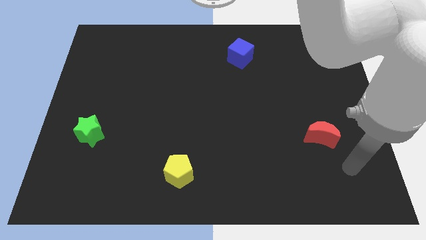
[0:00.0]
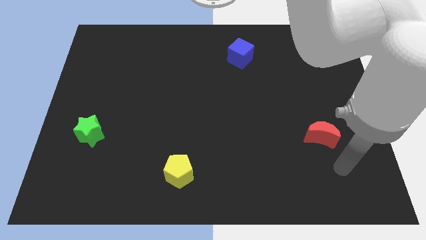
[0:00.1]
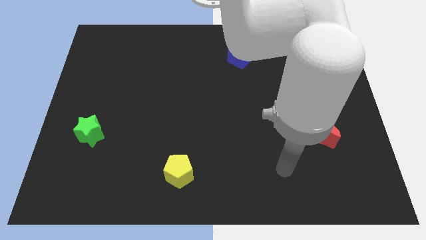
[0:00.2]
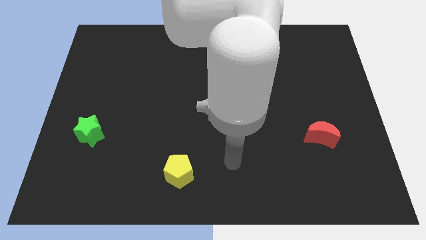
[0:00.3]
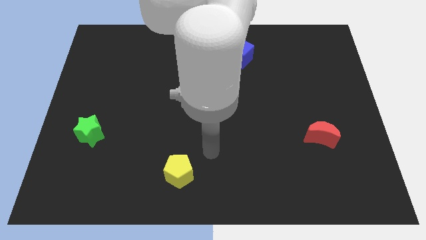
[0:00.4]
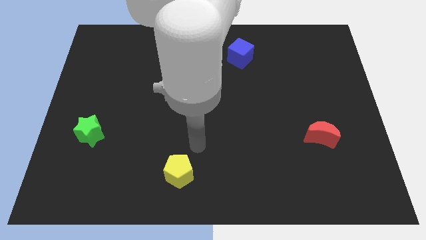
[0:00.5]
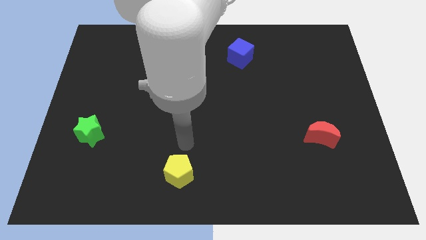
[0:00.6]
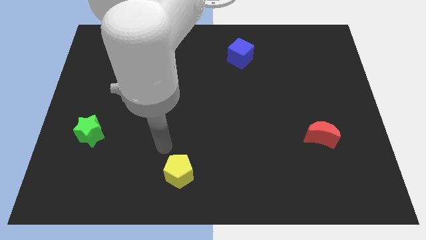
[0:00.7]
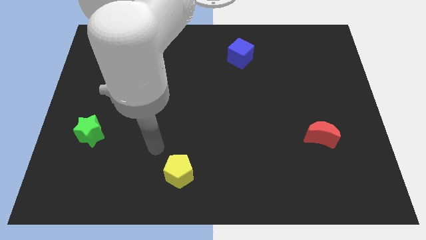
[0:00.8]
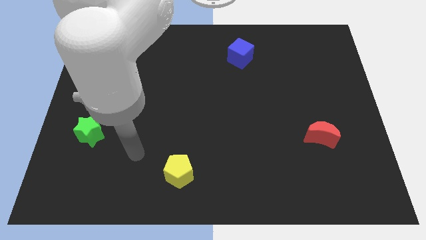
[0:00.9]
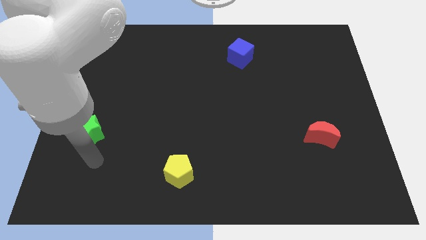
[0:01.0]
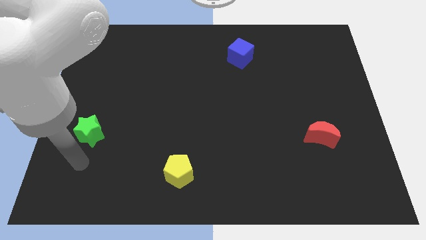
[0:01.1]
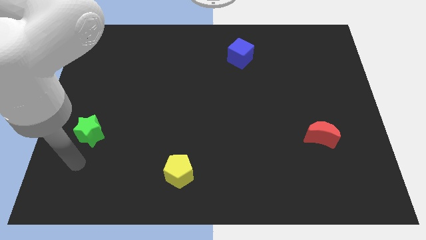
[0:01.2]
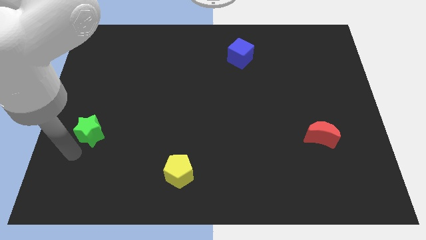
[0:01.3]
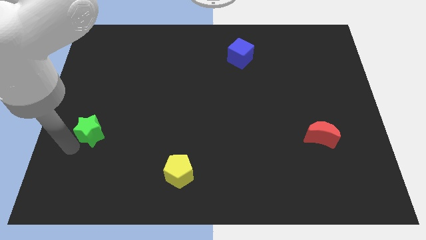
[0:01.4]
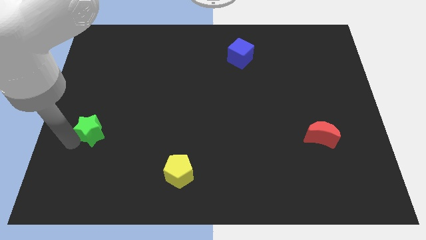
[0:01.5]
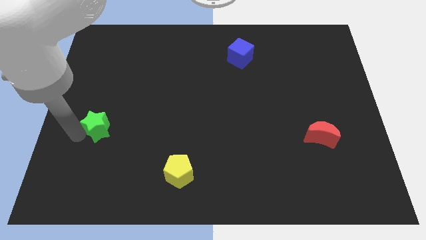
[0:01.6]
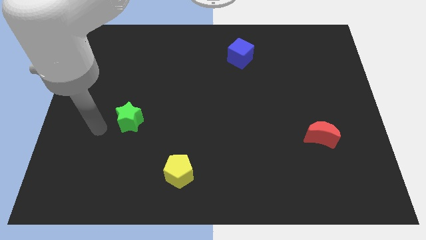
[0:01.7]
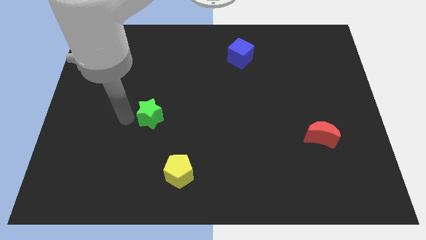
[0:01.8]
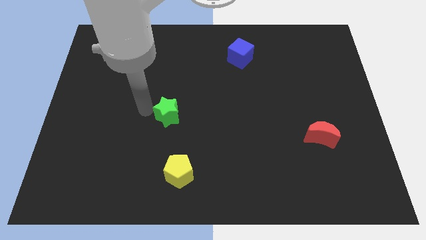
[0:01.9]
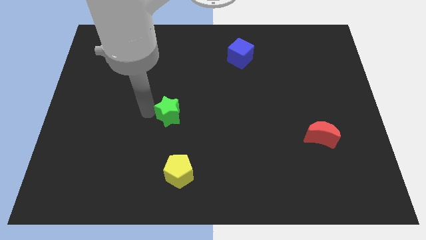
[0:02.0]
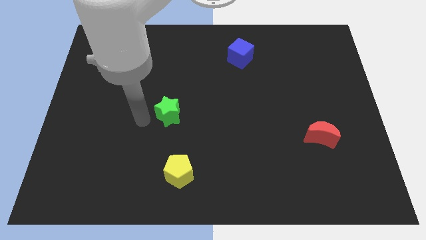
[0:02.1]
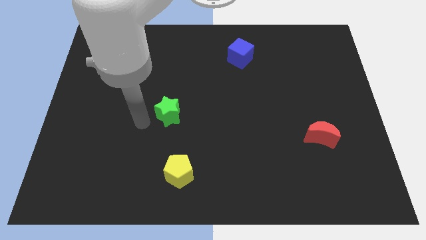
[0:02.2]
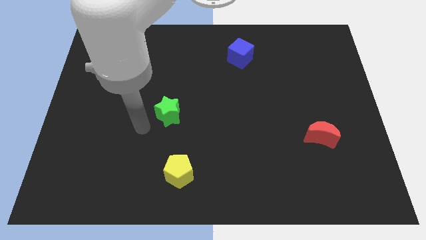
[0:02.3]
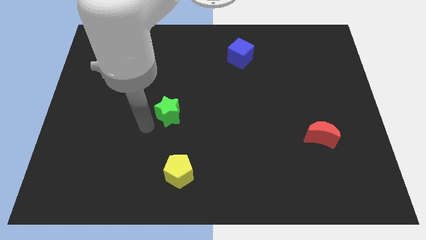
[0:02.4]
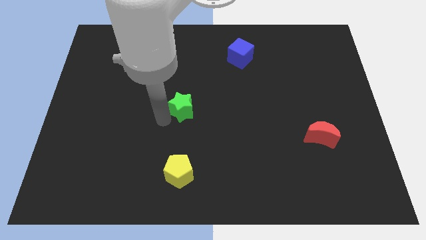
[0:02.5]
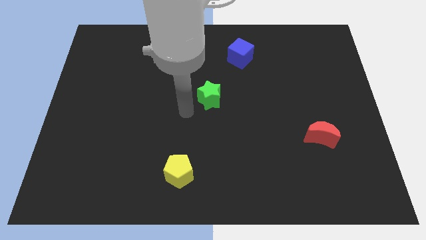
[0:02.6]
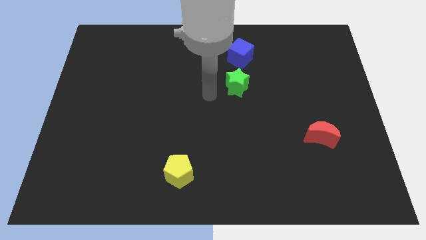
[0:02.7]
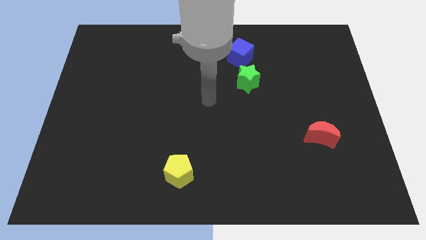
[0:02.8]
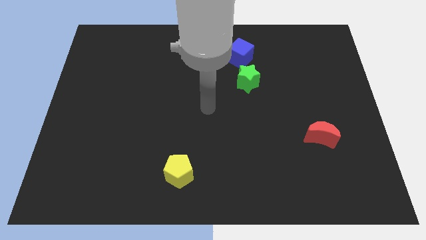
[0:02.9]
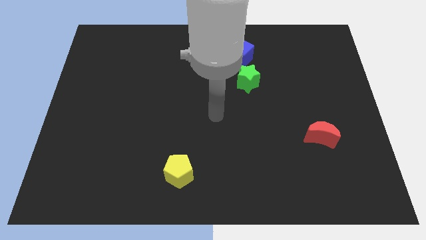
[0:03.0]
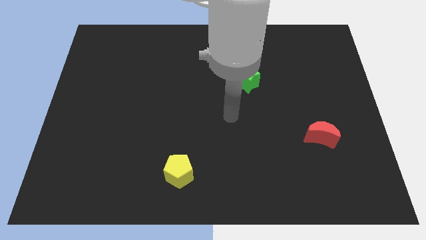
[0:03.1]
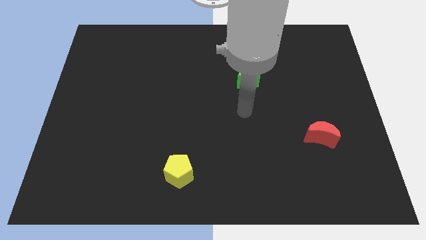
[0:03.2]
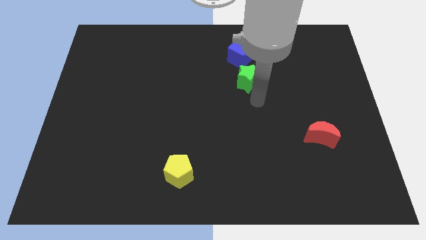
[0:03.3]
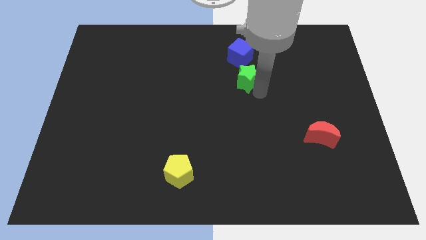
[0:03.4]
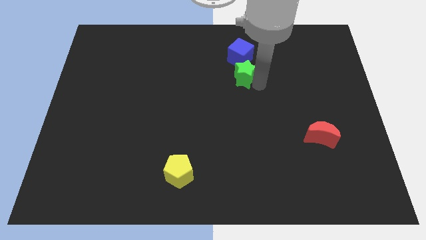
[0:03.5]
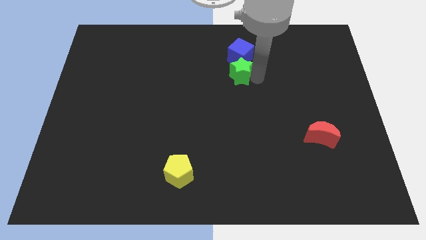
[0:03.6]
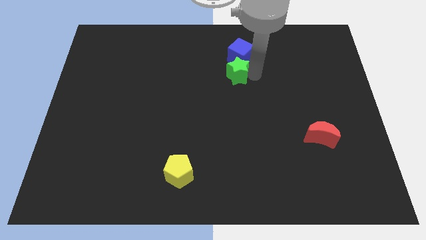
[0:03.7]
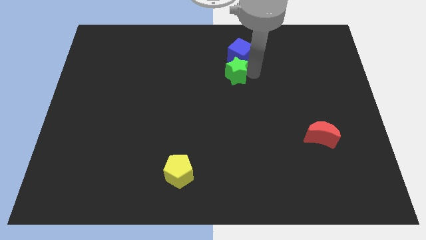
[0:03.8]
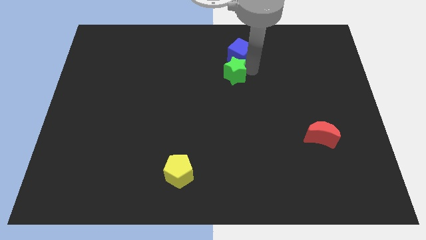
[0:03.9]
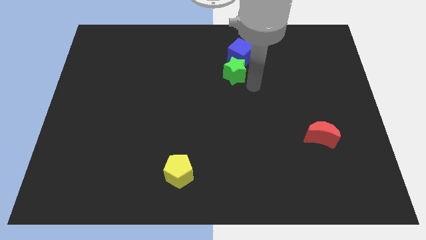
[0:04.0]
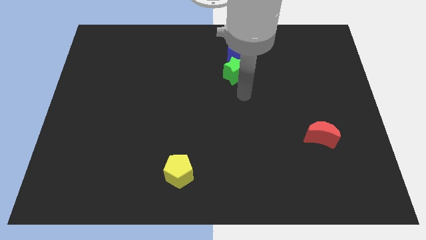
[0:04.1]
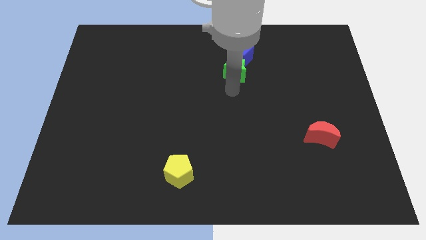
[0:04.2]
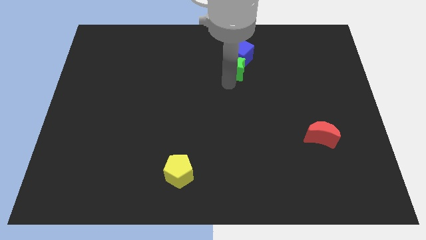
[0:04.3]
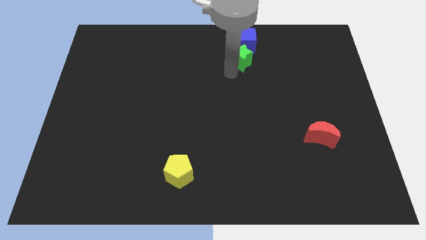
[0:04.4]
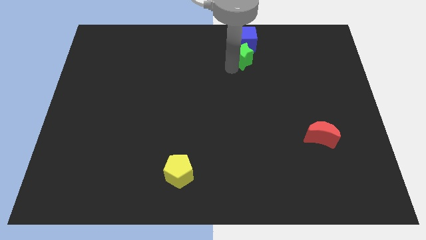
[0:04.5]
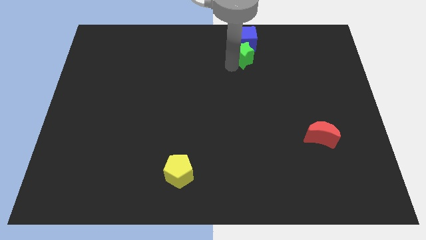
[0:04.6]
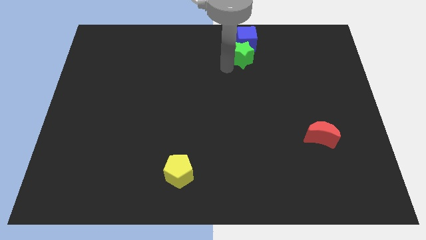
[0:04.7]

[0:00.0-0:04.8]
put the green star close to the blue block

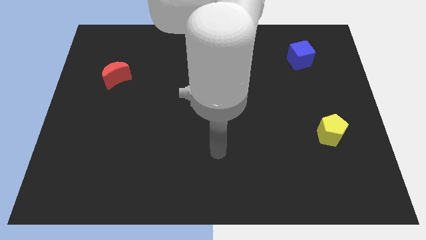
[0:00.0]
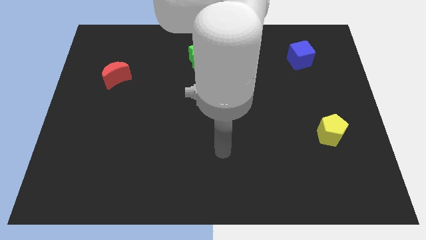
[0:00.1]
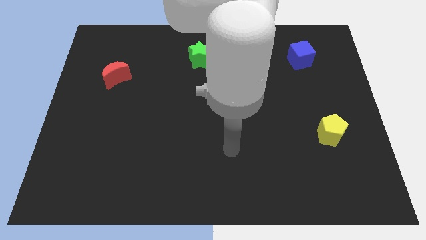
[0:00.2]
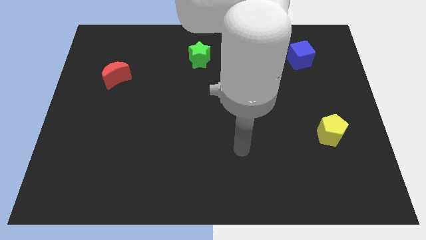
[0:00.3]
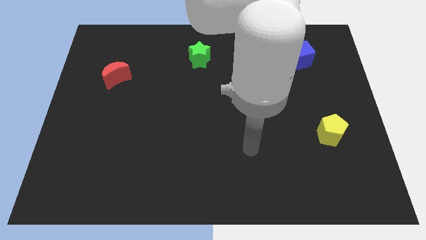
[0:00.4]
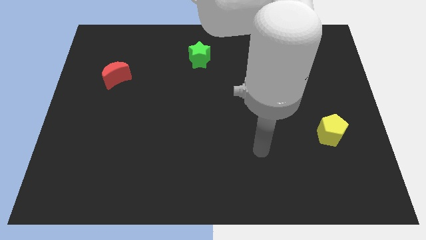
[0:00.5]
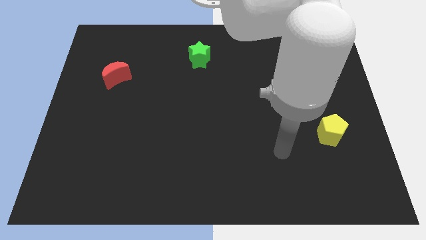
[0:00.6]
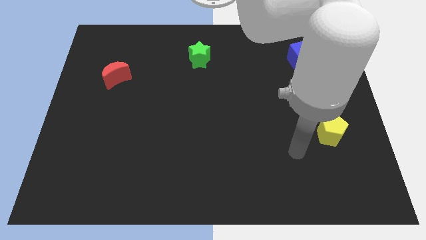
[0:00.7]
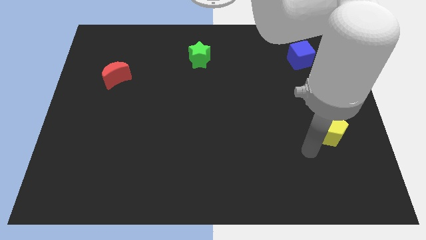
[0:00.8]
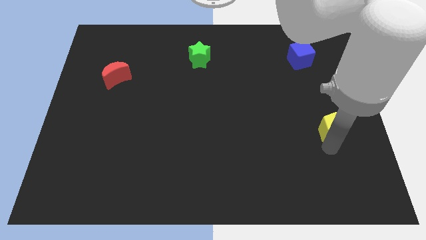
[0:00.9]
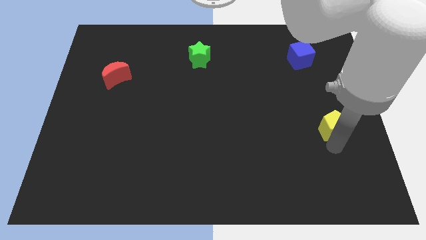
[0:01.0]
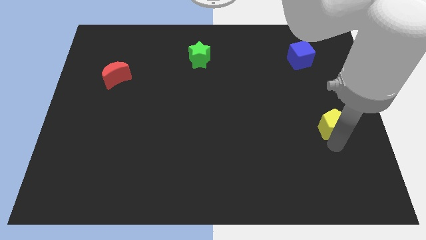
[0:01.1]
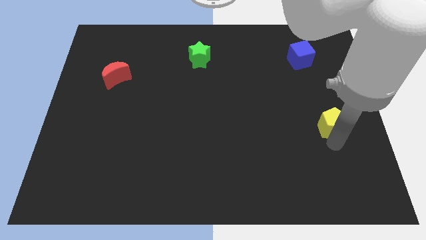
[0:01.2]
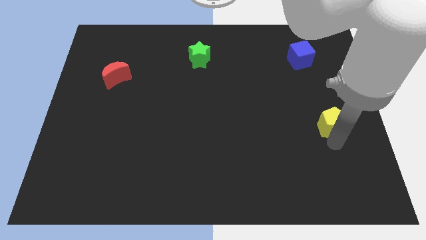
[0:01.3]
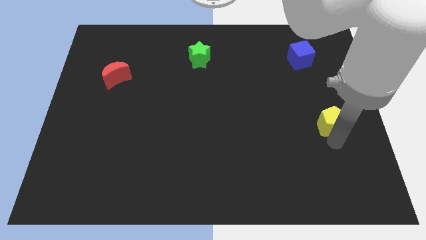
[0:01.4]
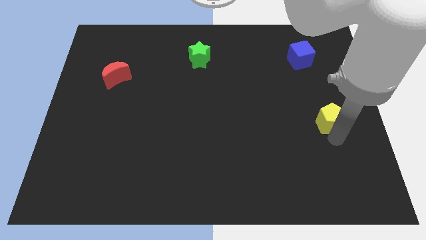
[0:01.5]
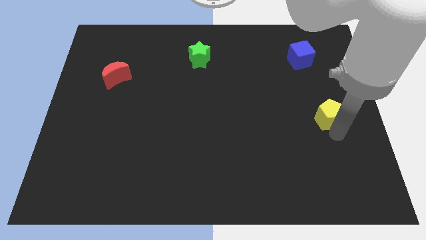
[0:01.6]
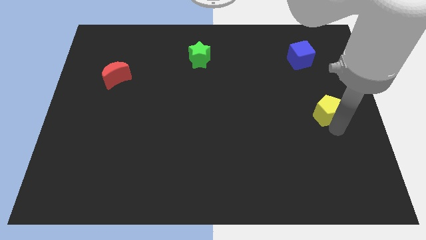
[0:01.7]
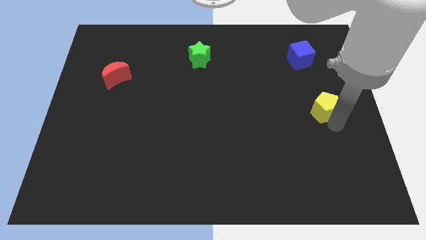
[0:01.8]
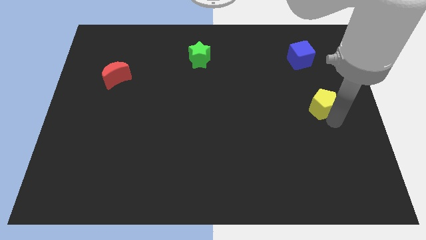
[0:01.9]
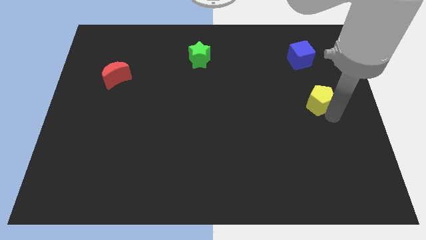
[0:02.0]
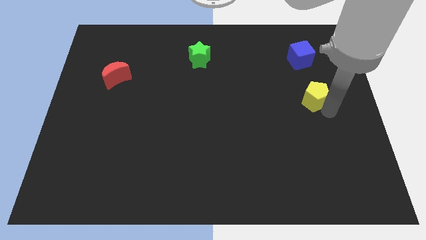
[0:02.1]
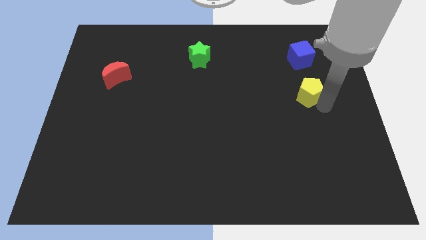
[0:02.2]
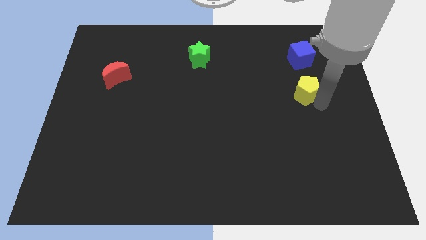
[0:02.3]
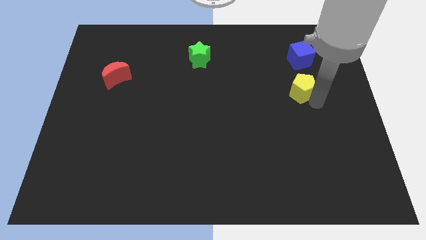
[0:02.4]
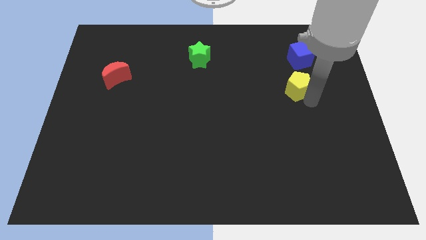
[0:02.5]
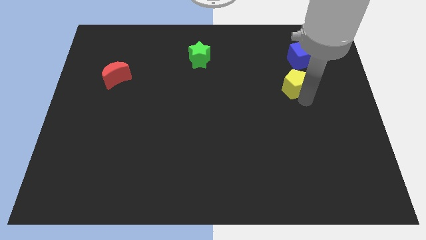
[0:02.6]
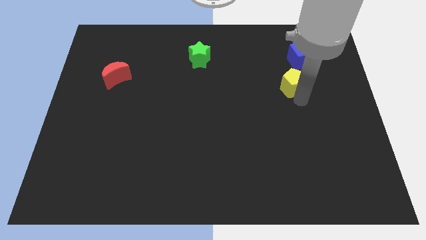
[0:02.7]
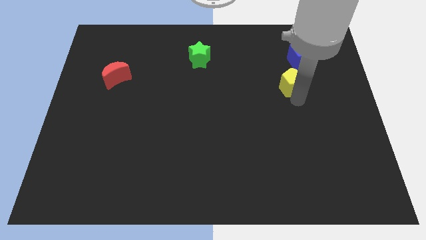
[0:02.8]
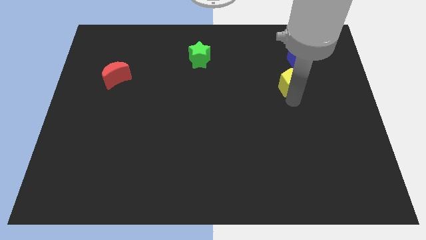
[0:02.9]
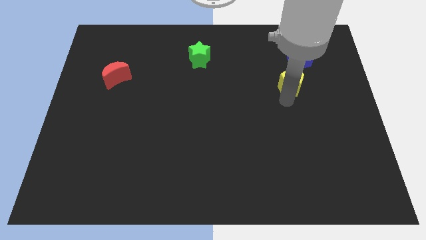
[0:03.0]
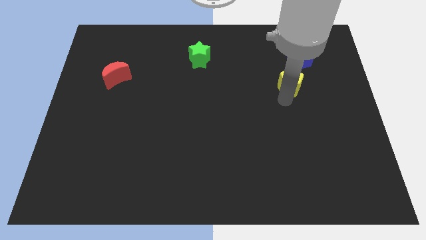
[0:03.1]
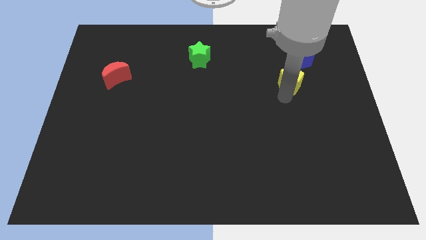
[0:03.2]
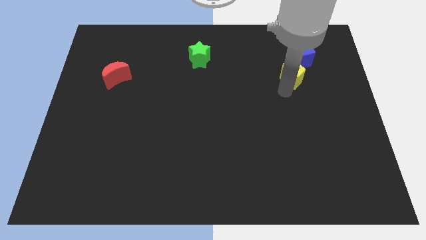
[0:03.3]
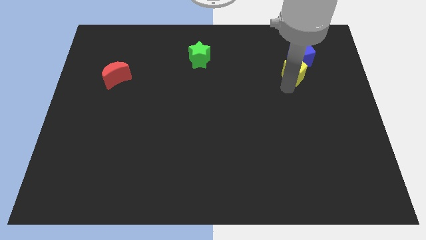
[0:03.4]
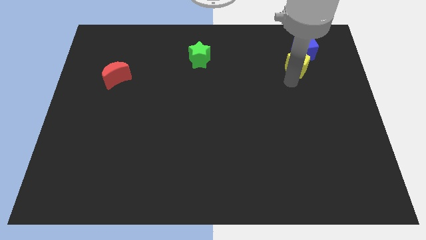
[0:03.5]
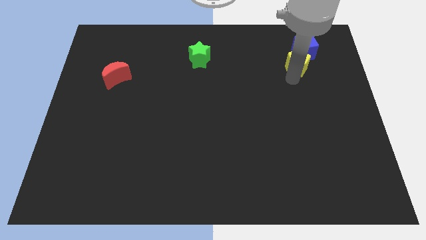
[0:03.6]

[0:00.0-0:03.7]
move the pentagon towards the cube

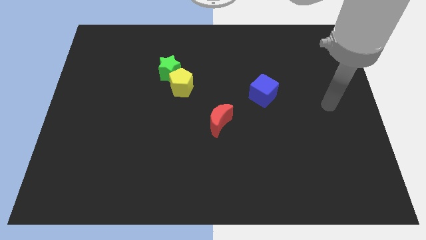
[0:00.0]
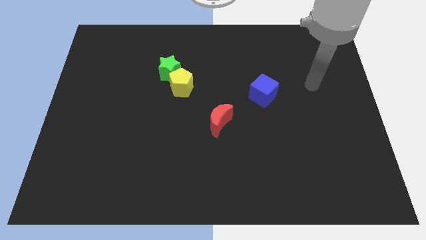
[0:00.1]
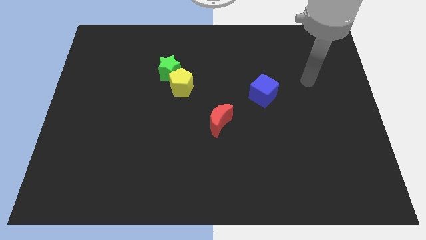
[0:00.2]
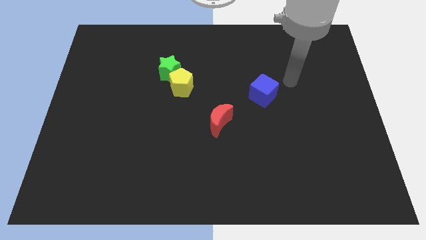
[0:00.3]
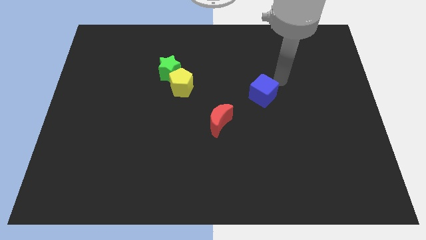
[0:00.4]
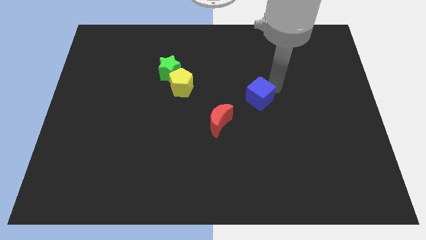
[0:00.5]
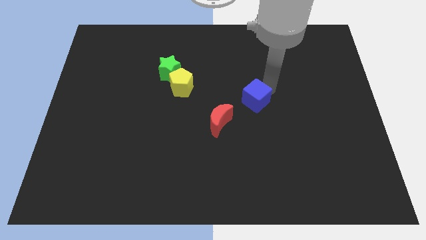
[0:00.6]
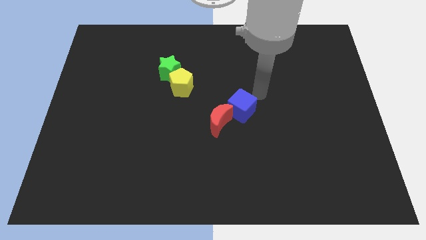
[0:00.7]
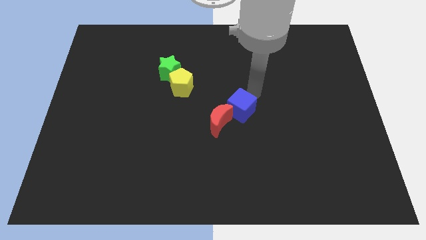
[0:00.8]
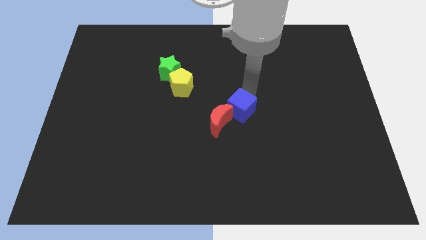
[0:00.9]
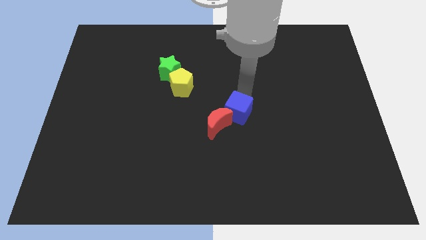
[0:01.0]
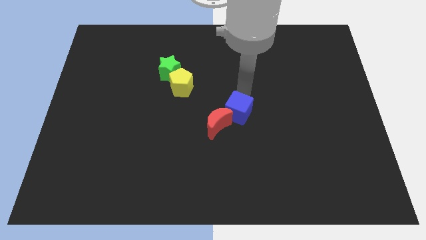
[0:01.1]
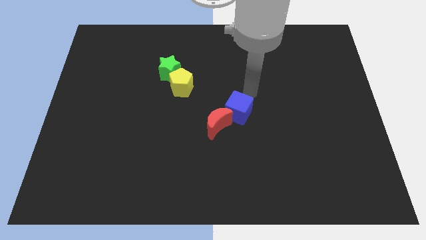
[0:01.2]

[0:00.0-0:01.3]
put the cube close to the red block
